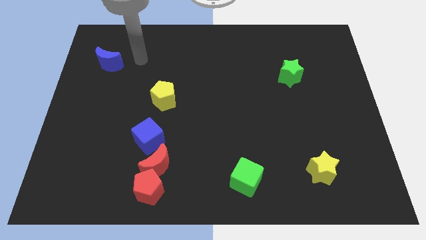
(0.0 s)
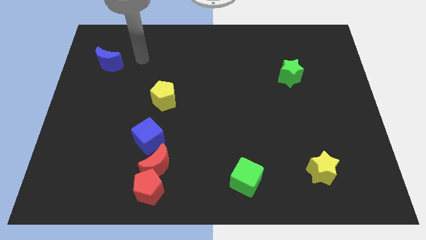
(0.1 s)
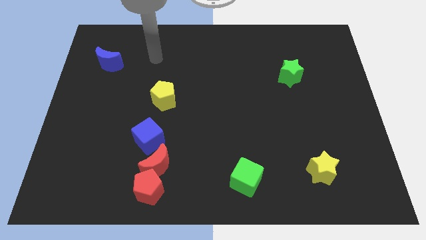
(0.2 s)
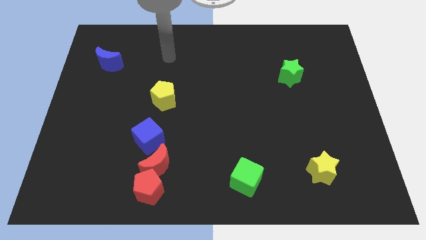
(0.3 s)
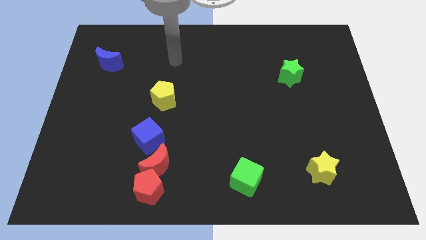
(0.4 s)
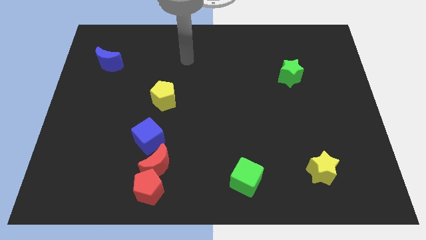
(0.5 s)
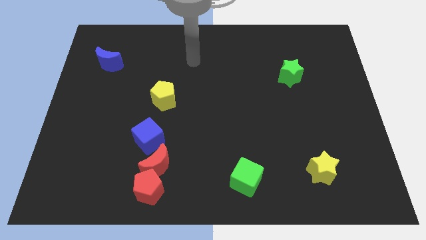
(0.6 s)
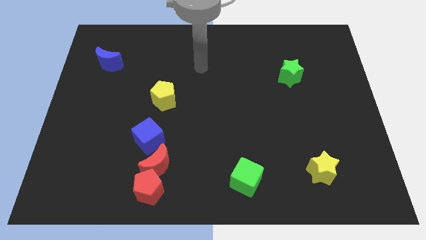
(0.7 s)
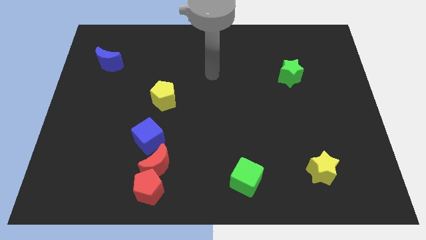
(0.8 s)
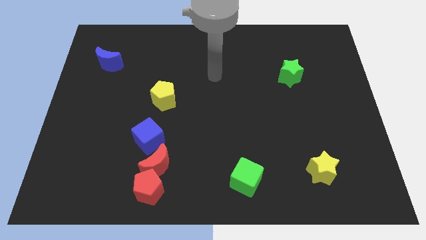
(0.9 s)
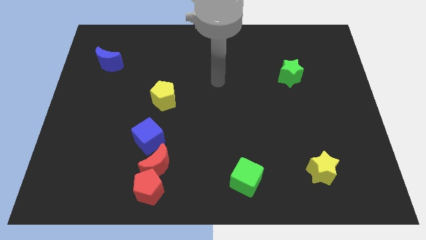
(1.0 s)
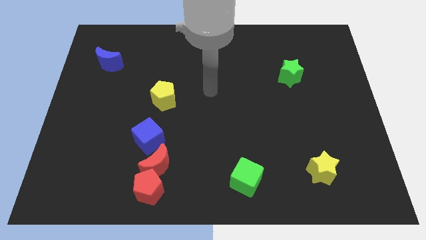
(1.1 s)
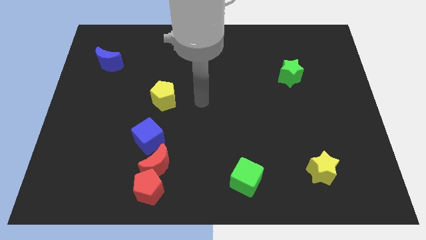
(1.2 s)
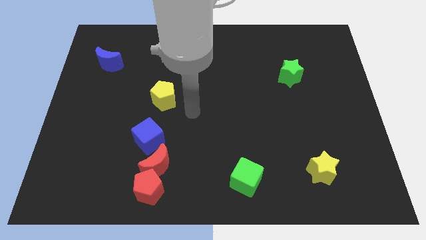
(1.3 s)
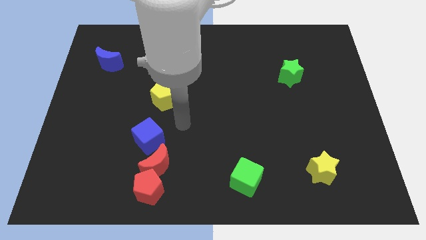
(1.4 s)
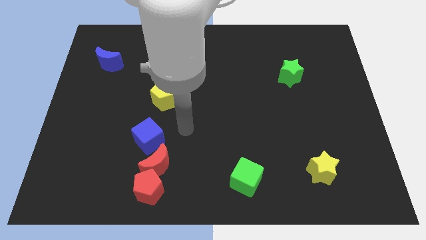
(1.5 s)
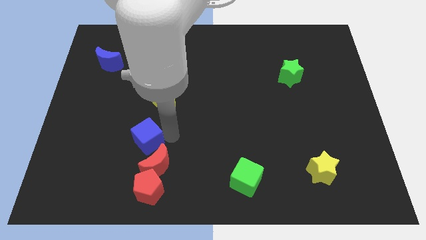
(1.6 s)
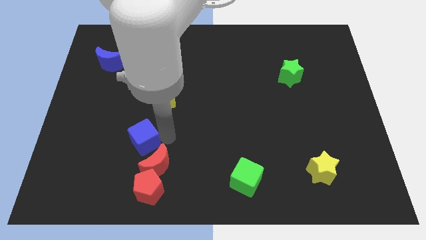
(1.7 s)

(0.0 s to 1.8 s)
touch the right side of the blue cube

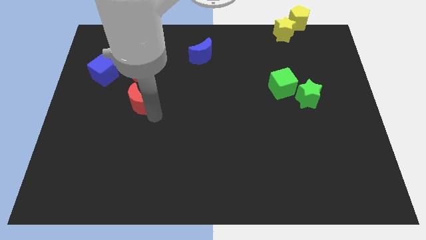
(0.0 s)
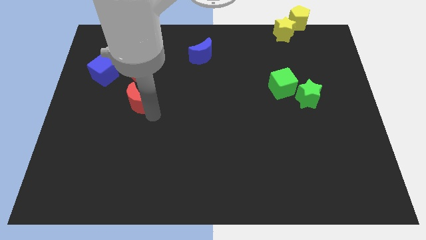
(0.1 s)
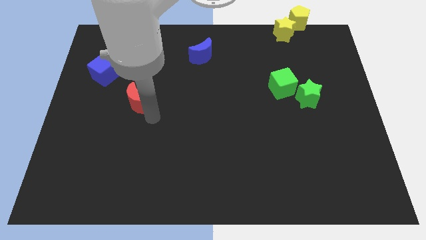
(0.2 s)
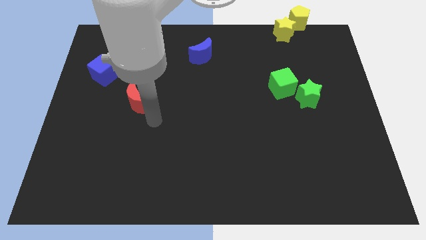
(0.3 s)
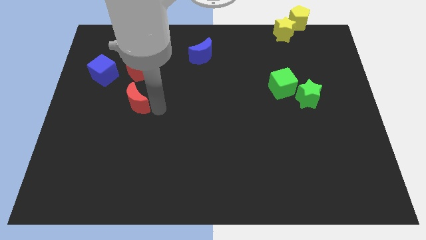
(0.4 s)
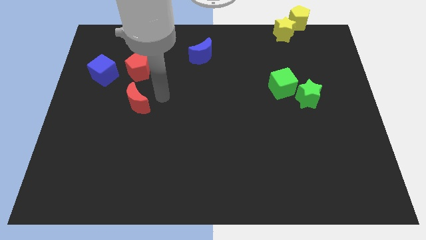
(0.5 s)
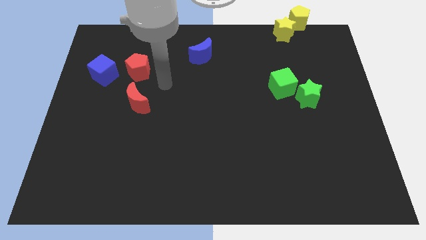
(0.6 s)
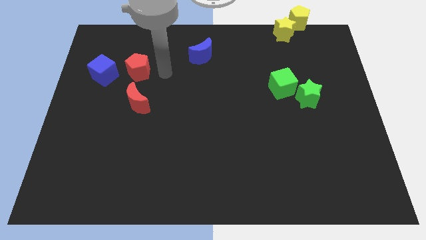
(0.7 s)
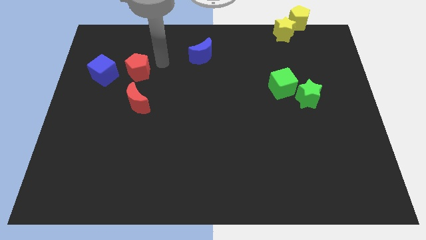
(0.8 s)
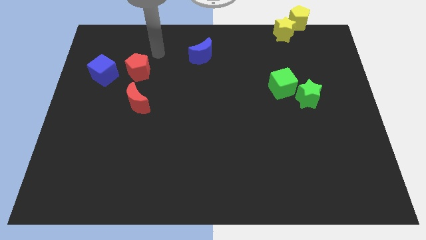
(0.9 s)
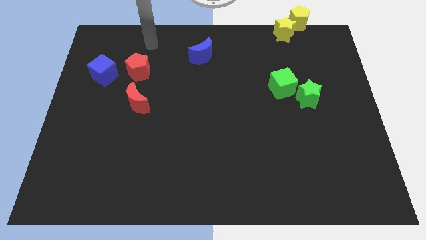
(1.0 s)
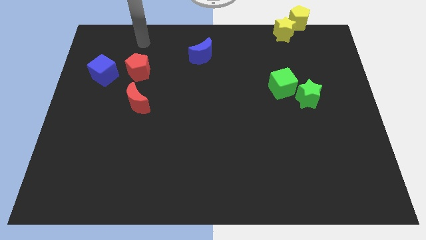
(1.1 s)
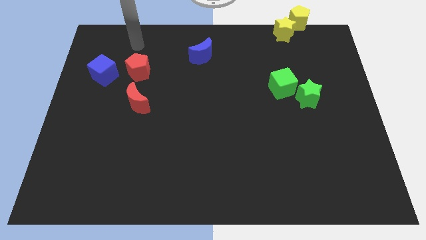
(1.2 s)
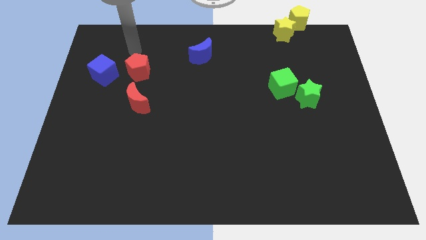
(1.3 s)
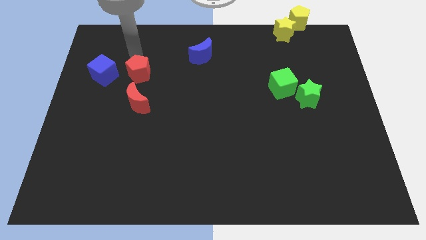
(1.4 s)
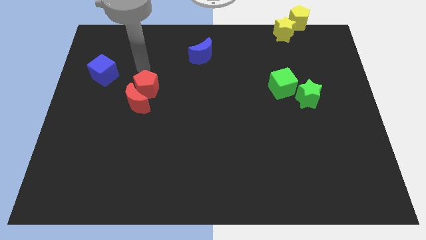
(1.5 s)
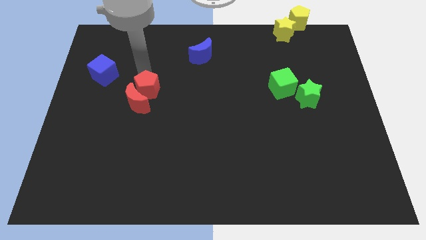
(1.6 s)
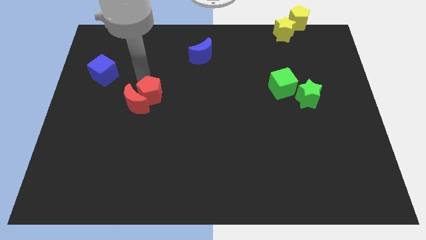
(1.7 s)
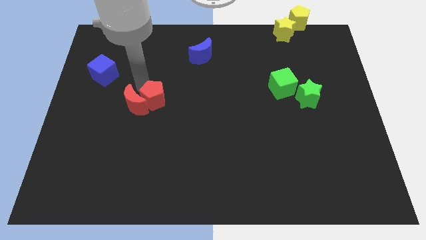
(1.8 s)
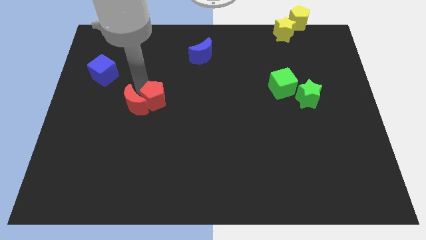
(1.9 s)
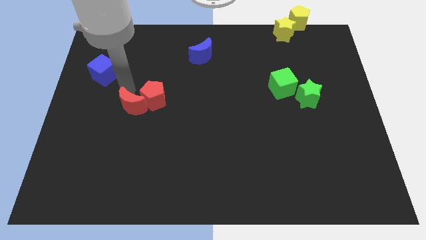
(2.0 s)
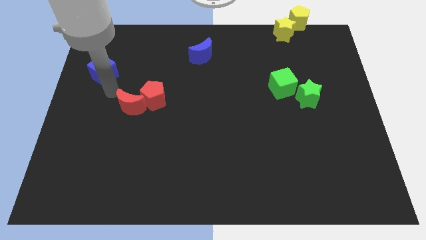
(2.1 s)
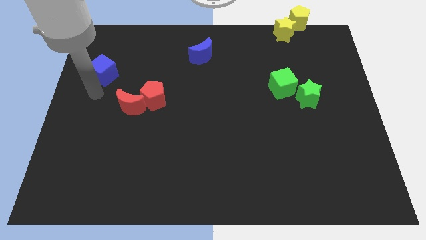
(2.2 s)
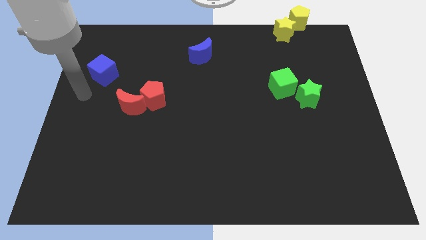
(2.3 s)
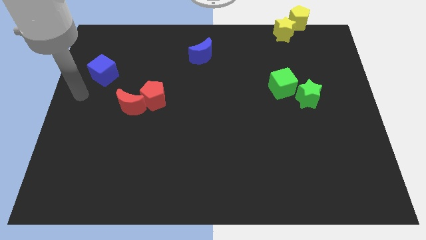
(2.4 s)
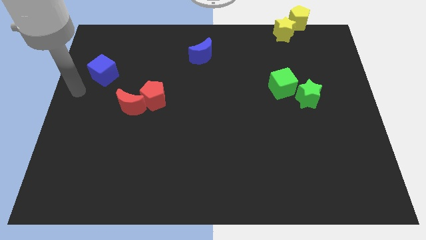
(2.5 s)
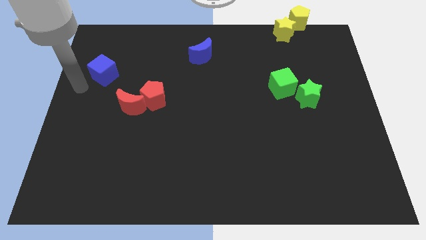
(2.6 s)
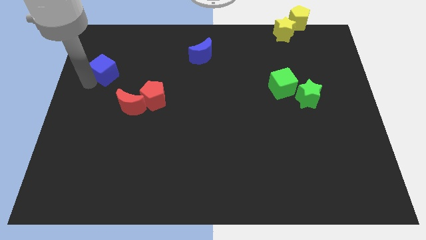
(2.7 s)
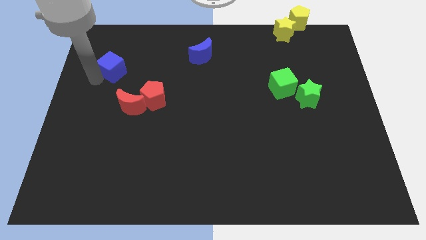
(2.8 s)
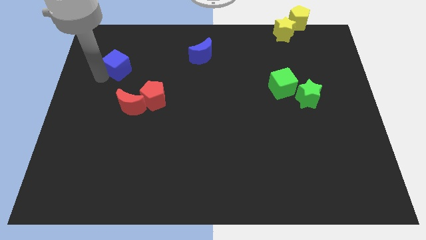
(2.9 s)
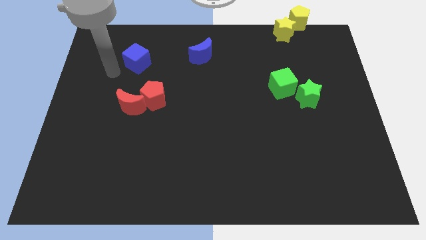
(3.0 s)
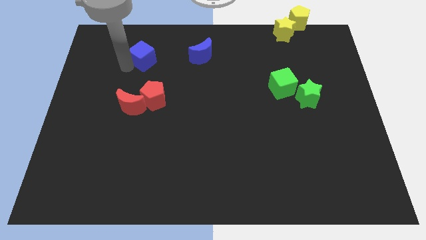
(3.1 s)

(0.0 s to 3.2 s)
push the red pentagon into the right of the red crescent

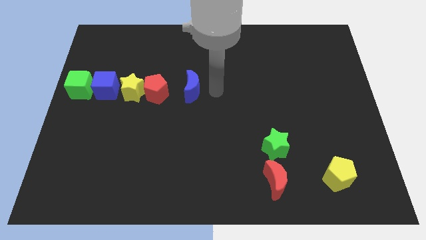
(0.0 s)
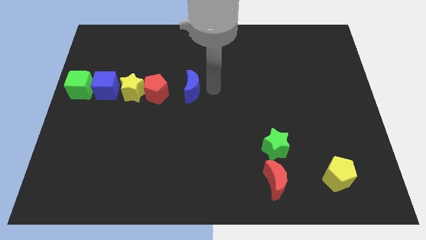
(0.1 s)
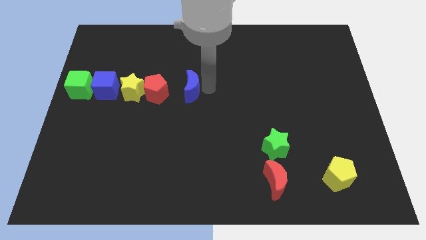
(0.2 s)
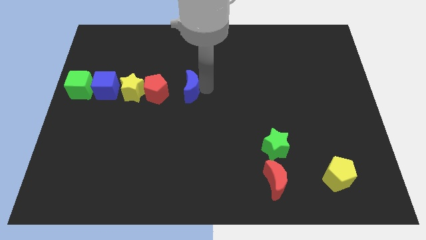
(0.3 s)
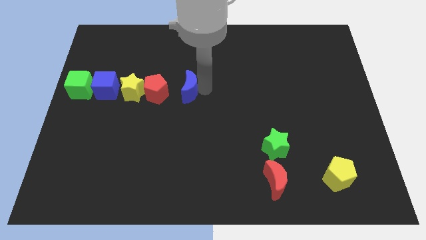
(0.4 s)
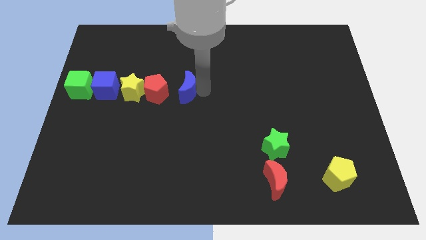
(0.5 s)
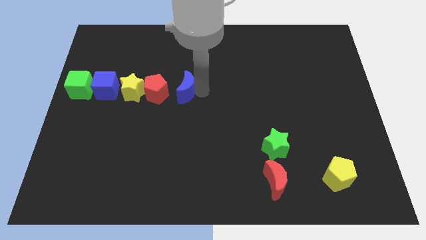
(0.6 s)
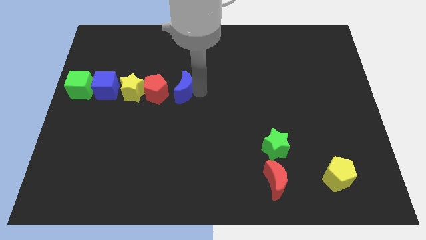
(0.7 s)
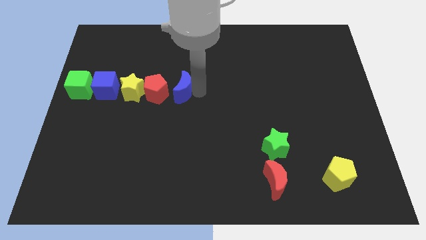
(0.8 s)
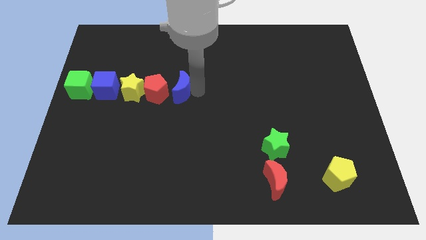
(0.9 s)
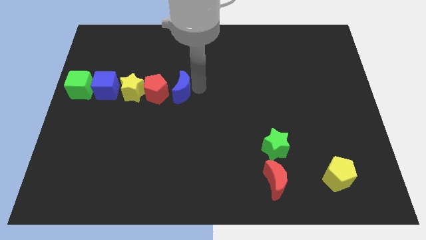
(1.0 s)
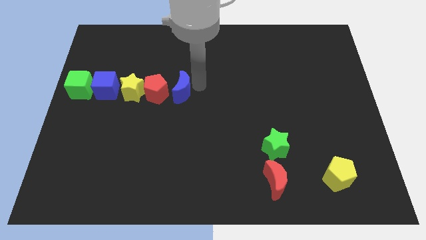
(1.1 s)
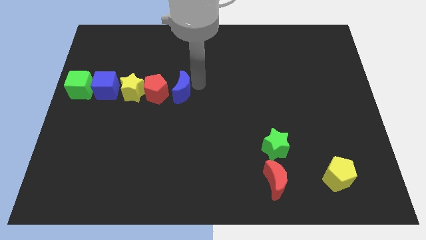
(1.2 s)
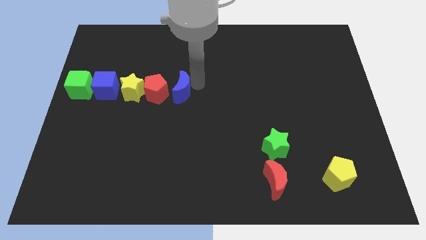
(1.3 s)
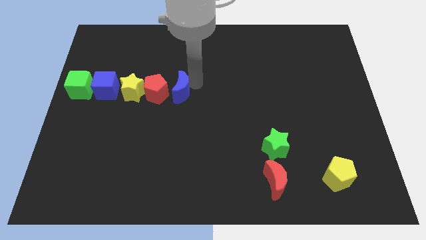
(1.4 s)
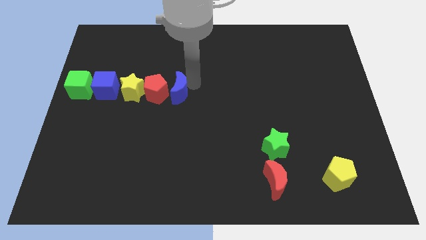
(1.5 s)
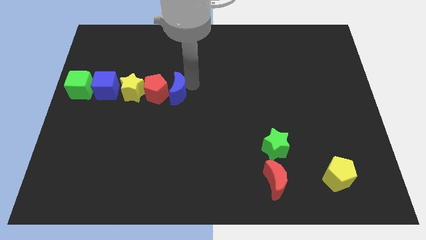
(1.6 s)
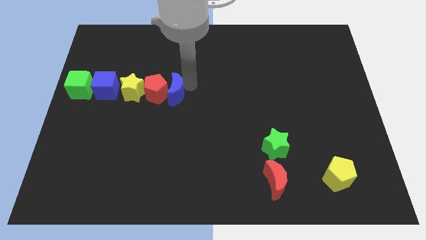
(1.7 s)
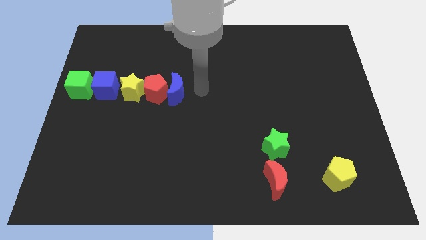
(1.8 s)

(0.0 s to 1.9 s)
place blue crescent near red pentagon

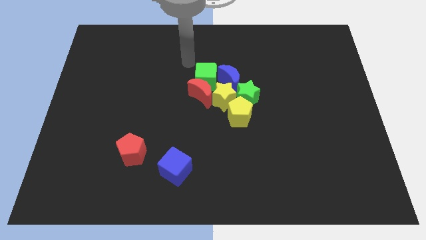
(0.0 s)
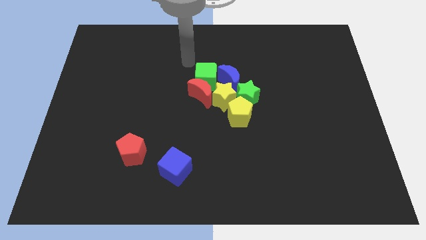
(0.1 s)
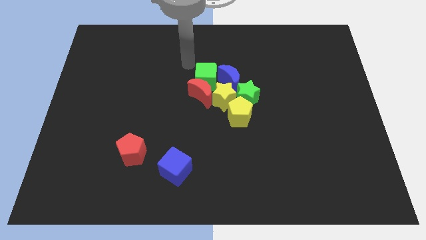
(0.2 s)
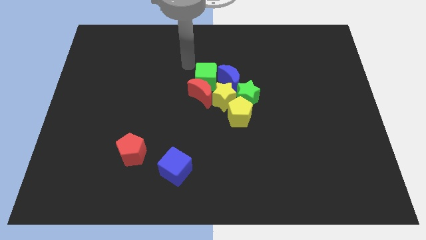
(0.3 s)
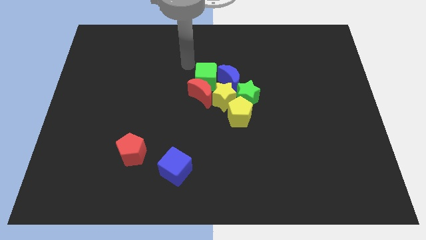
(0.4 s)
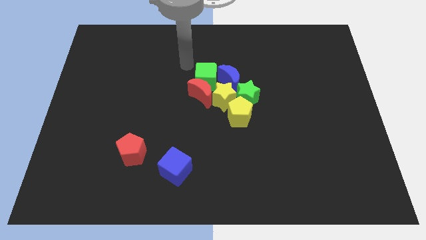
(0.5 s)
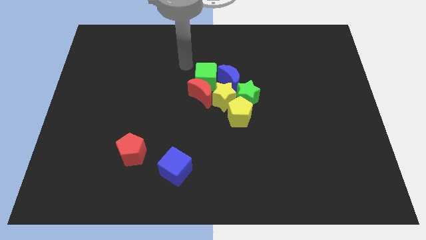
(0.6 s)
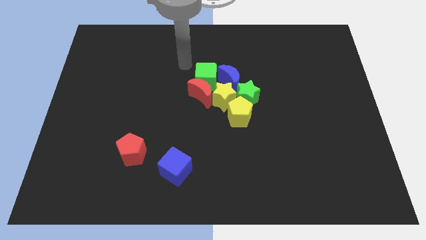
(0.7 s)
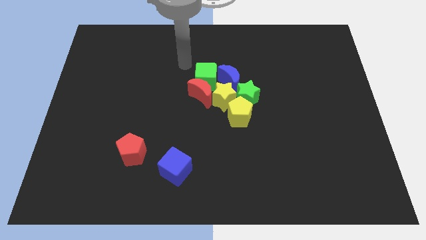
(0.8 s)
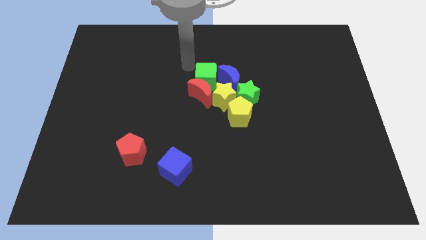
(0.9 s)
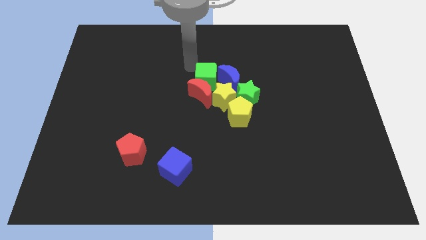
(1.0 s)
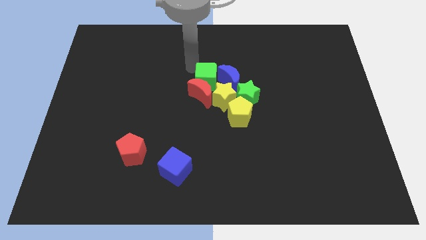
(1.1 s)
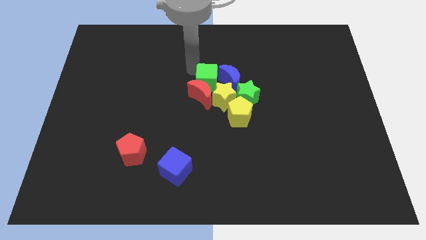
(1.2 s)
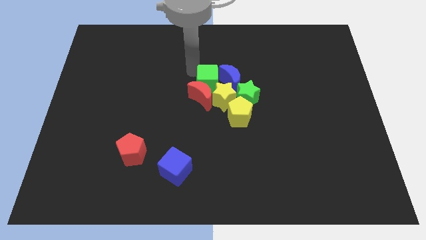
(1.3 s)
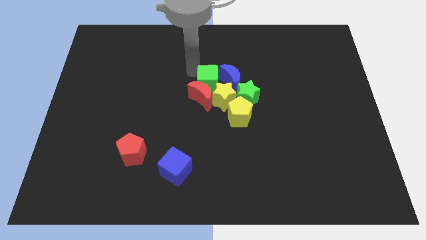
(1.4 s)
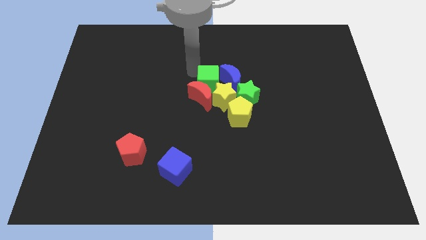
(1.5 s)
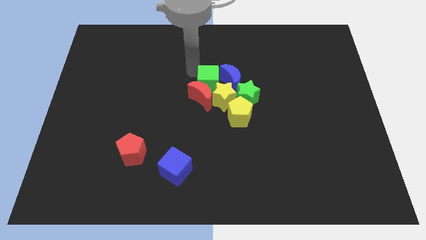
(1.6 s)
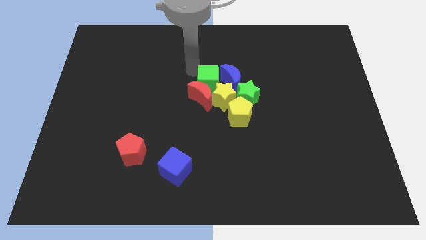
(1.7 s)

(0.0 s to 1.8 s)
slightly push the green cube into the yellow star

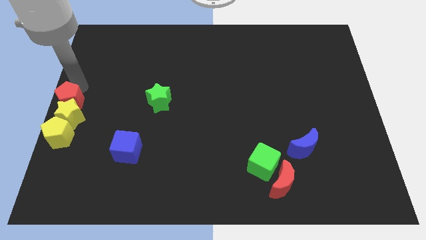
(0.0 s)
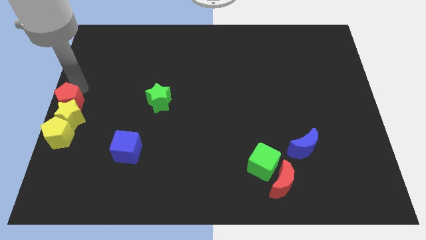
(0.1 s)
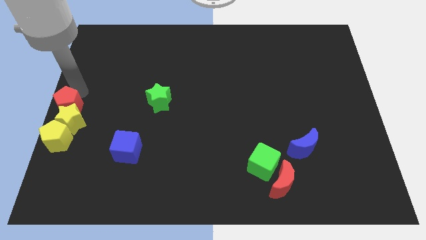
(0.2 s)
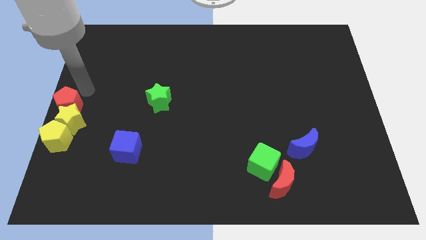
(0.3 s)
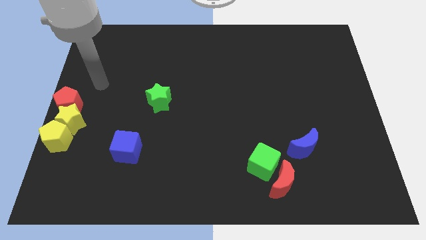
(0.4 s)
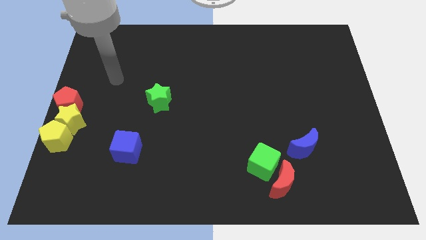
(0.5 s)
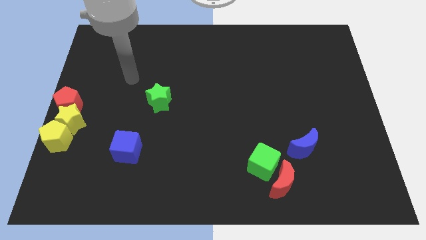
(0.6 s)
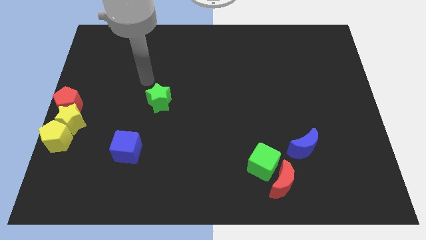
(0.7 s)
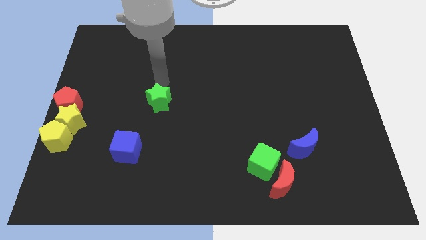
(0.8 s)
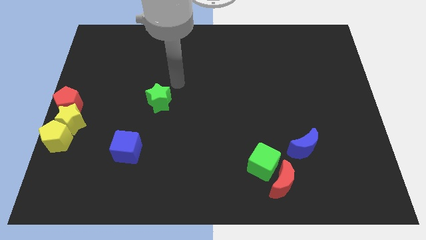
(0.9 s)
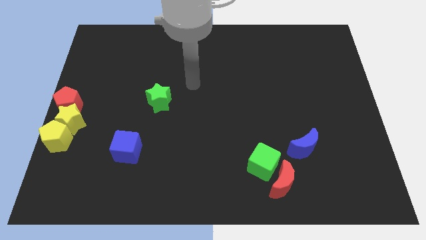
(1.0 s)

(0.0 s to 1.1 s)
move your hand towards center
